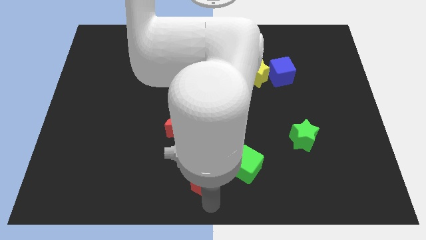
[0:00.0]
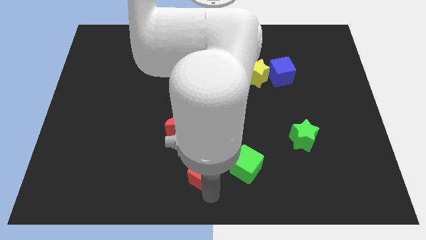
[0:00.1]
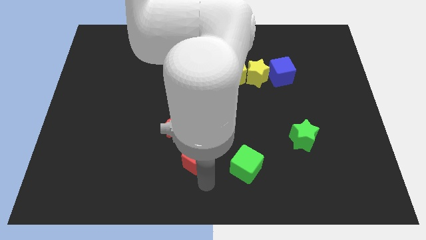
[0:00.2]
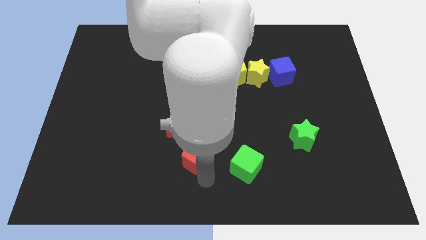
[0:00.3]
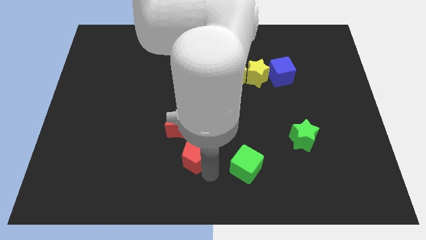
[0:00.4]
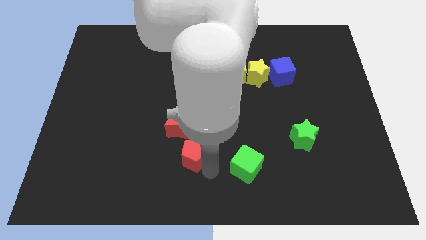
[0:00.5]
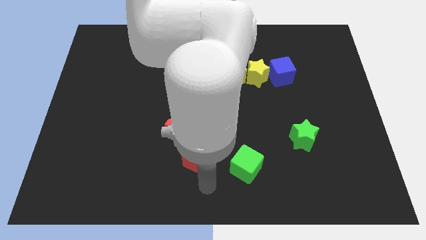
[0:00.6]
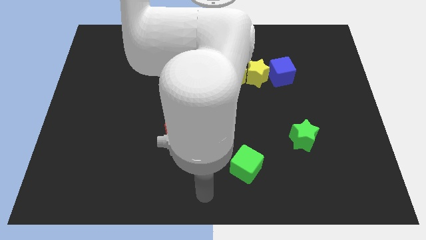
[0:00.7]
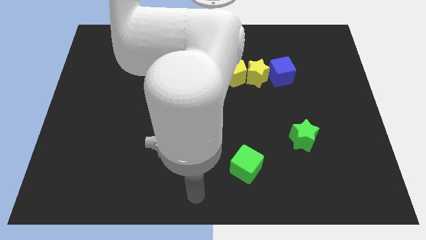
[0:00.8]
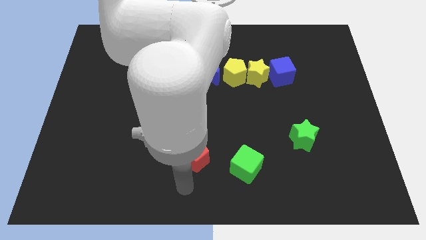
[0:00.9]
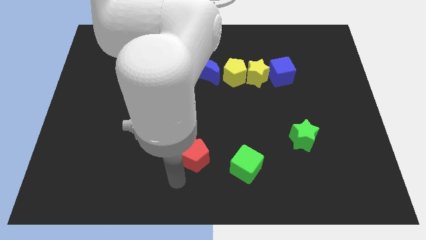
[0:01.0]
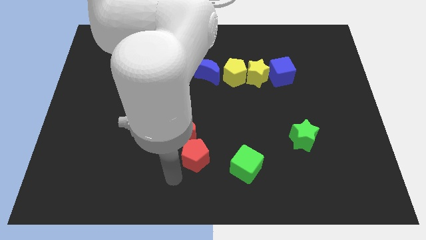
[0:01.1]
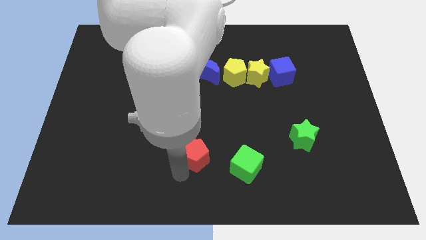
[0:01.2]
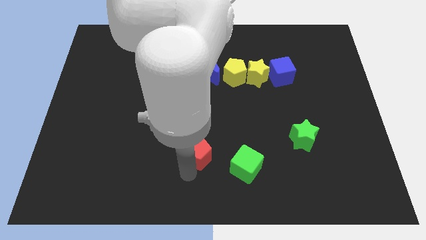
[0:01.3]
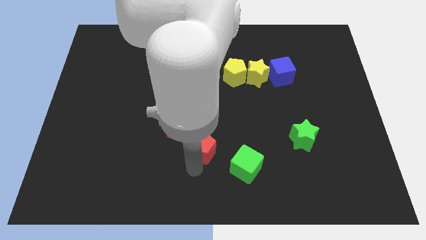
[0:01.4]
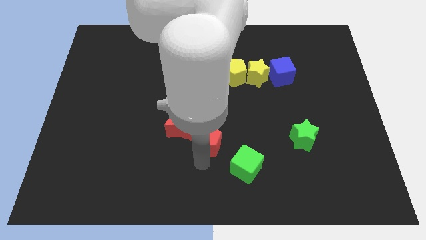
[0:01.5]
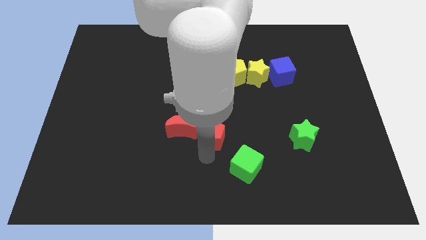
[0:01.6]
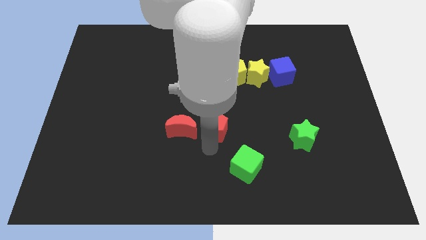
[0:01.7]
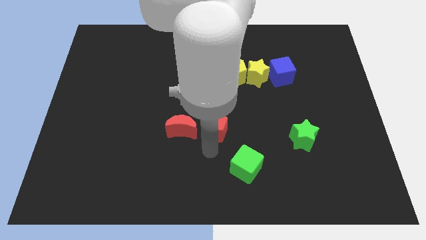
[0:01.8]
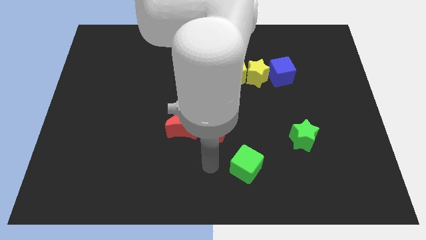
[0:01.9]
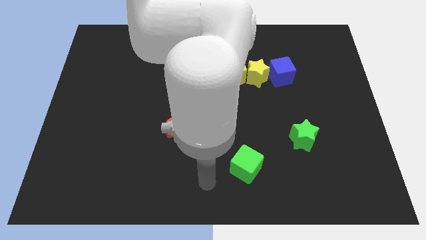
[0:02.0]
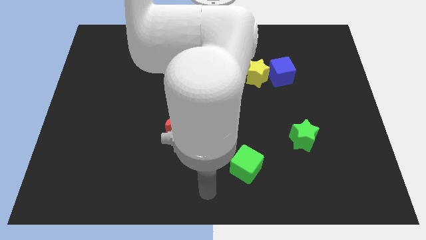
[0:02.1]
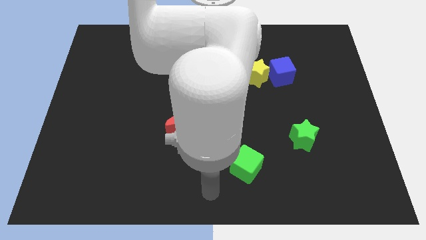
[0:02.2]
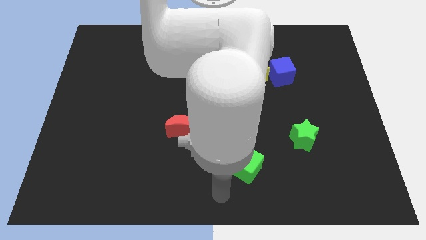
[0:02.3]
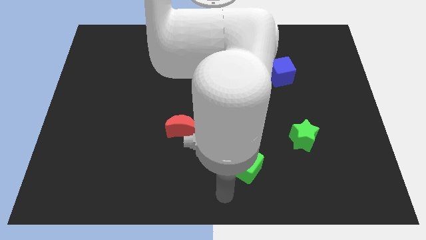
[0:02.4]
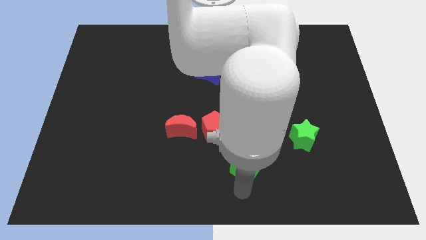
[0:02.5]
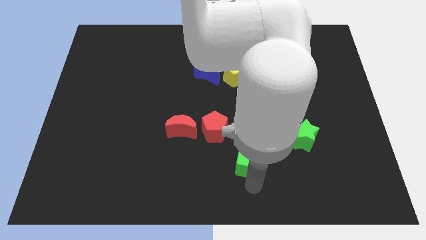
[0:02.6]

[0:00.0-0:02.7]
push the red pentagon to the right of the red crescent

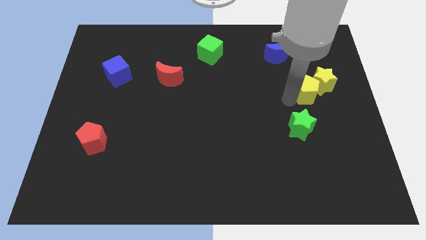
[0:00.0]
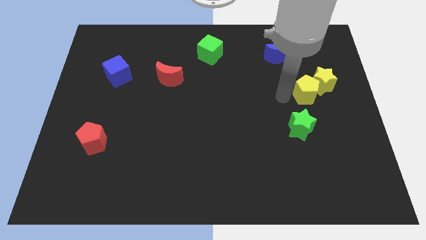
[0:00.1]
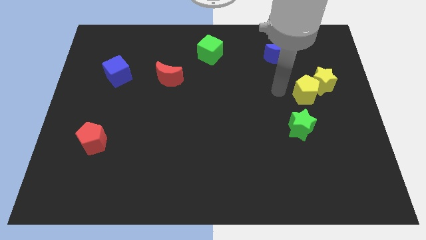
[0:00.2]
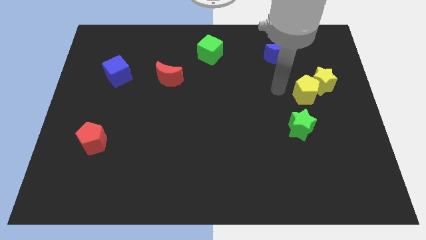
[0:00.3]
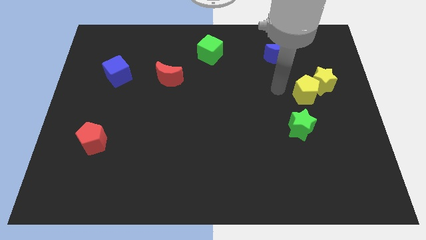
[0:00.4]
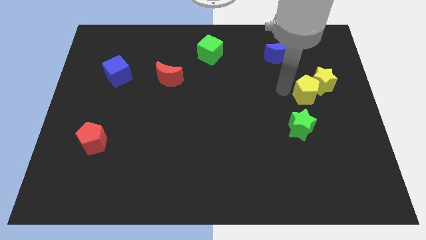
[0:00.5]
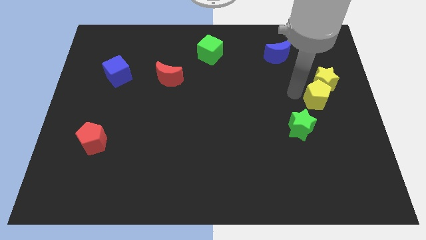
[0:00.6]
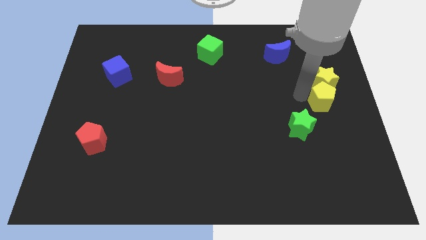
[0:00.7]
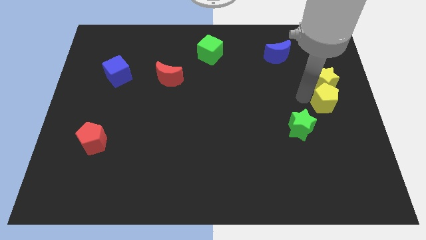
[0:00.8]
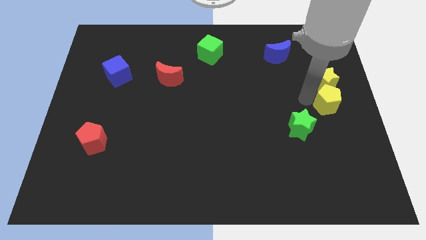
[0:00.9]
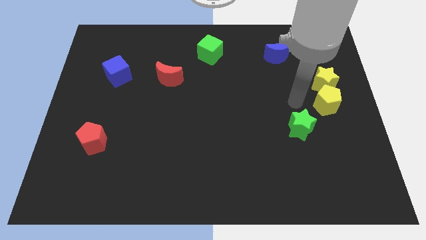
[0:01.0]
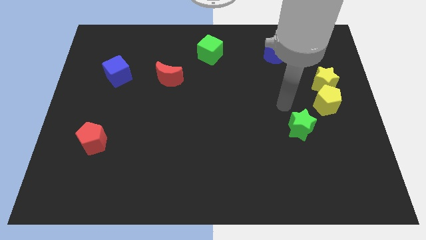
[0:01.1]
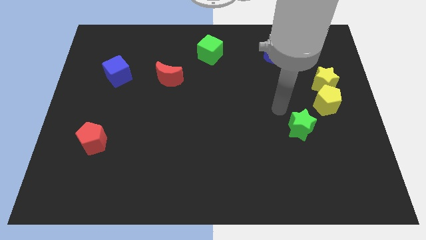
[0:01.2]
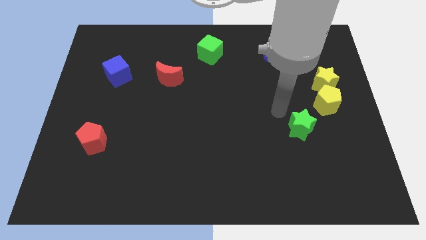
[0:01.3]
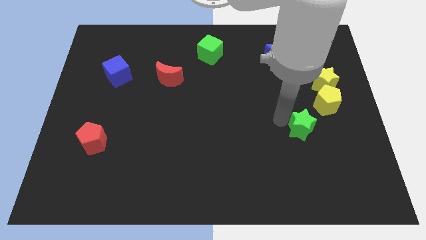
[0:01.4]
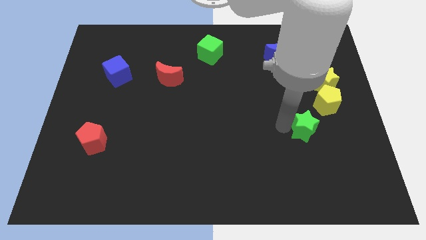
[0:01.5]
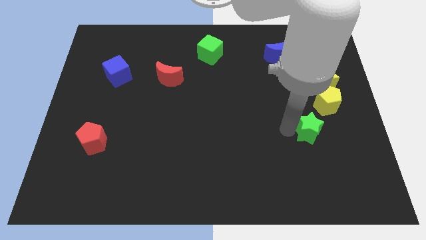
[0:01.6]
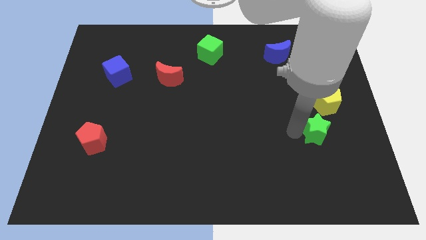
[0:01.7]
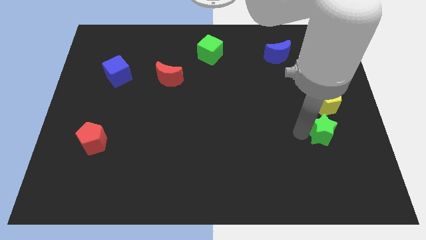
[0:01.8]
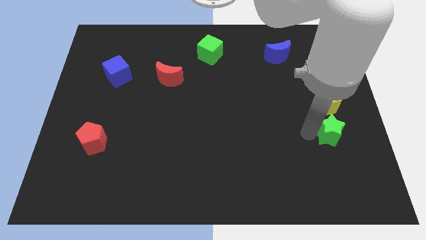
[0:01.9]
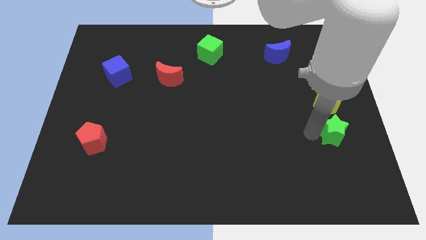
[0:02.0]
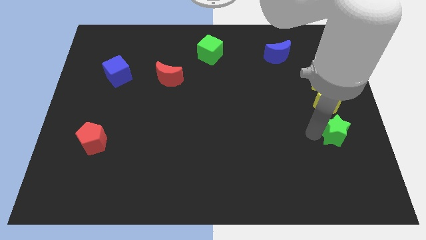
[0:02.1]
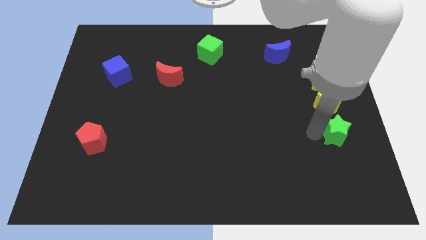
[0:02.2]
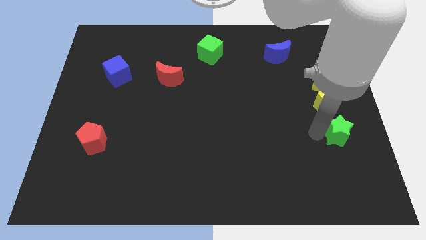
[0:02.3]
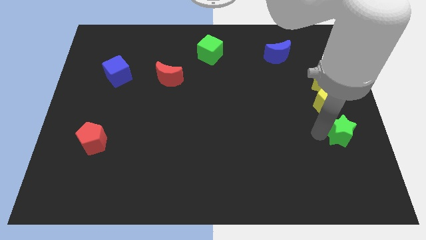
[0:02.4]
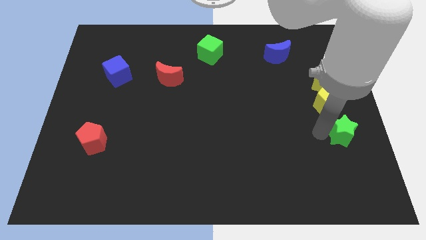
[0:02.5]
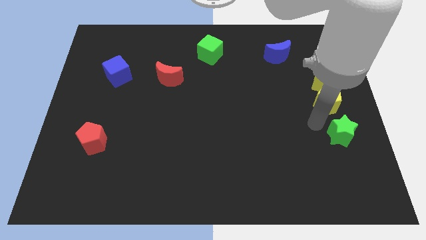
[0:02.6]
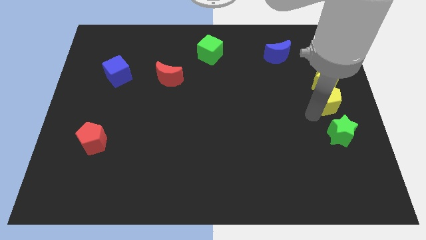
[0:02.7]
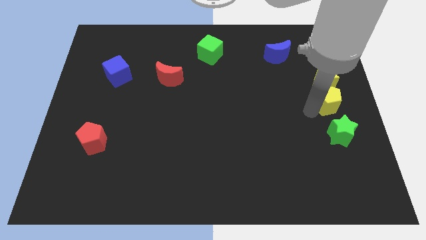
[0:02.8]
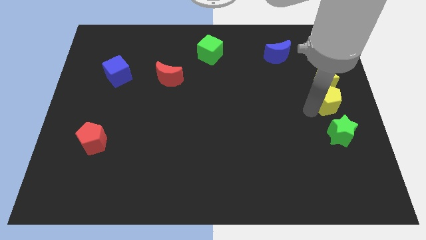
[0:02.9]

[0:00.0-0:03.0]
place green star down to yellow pentagon

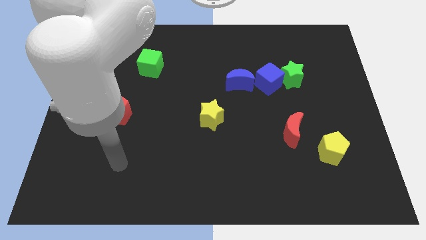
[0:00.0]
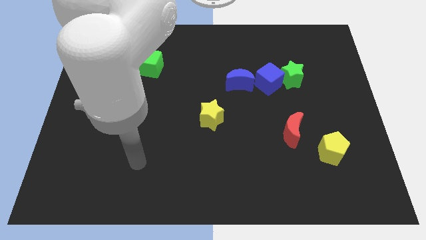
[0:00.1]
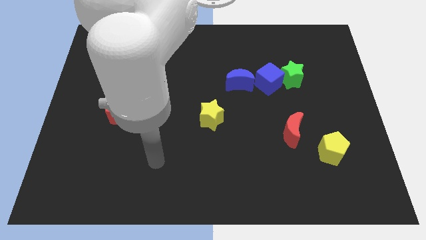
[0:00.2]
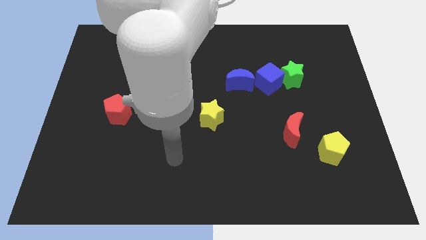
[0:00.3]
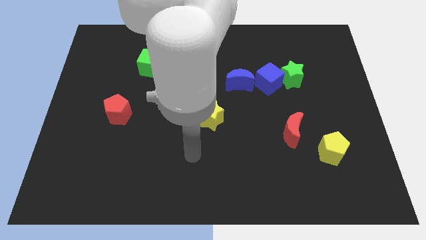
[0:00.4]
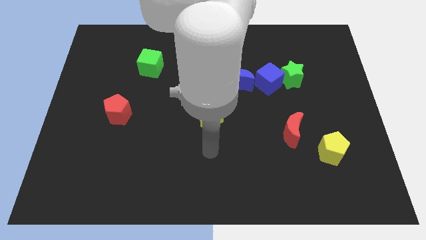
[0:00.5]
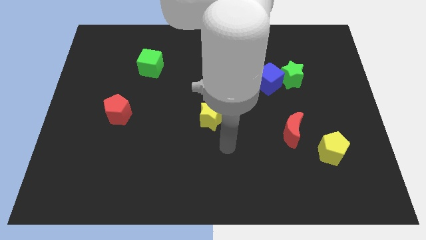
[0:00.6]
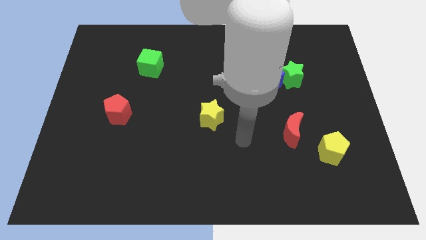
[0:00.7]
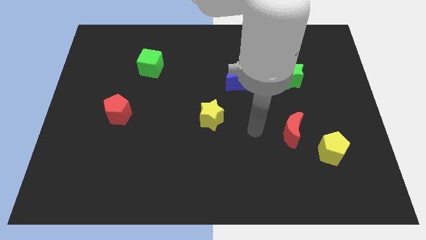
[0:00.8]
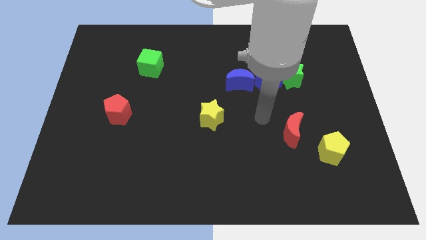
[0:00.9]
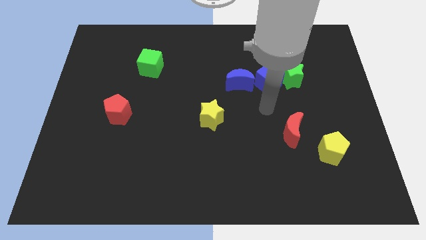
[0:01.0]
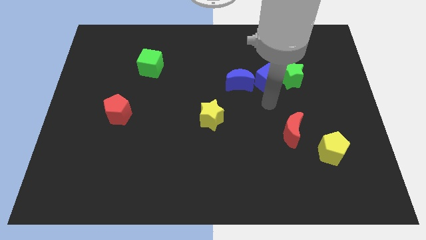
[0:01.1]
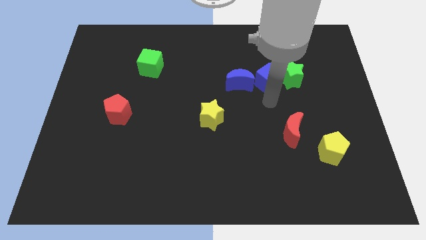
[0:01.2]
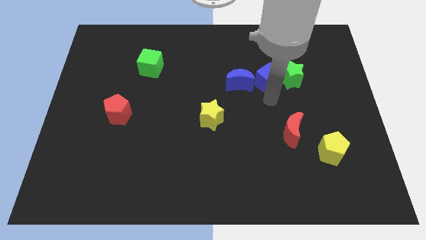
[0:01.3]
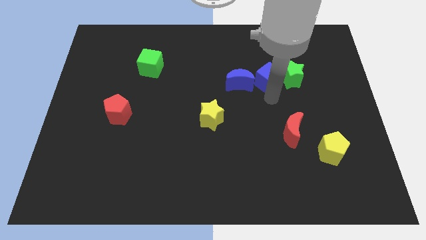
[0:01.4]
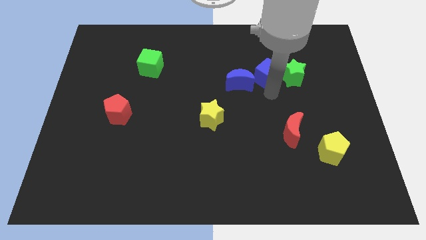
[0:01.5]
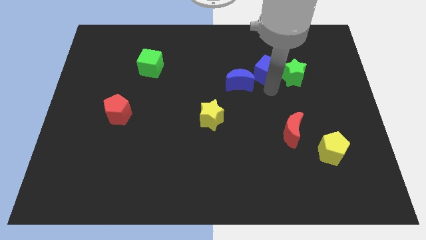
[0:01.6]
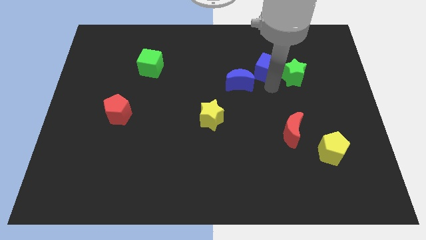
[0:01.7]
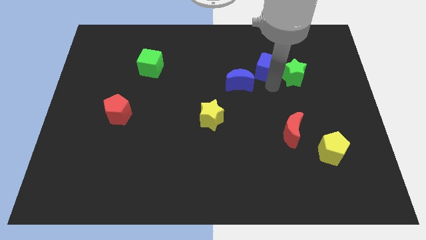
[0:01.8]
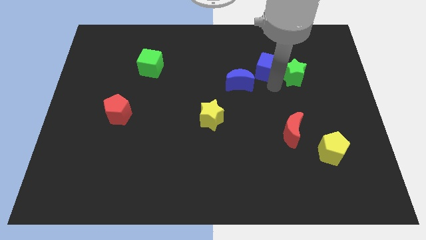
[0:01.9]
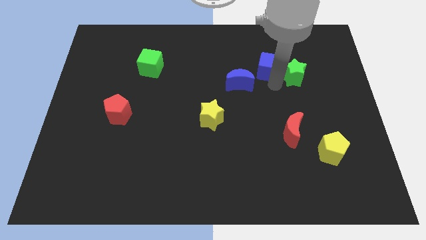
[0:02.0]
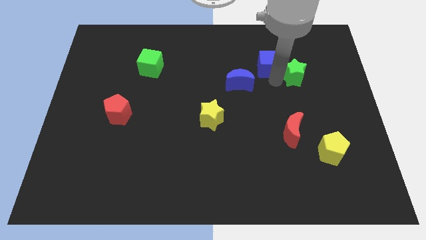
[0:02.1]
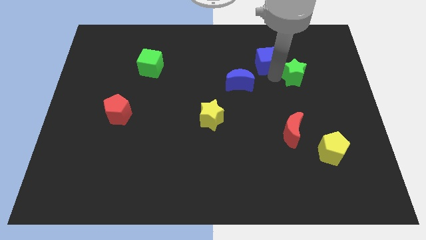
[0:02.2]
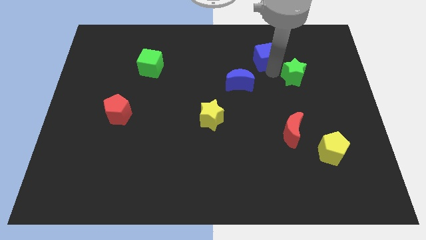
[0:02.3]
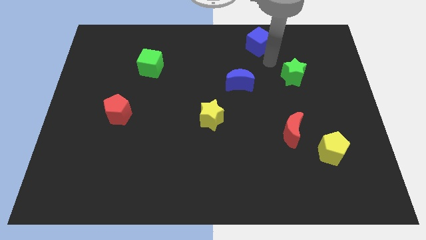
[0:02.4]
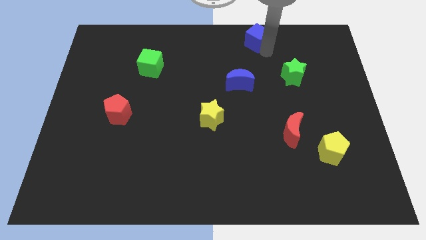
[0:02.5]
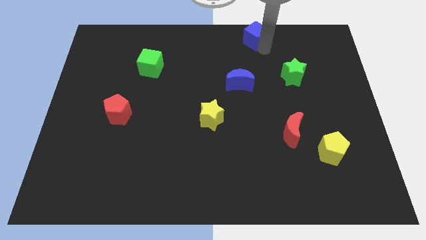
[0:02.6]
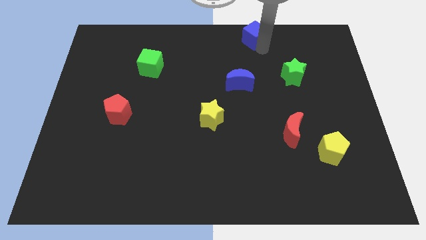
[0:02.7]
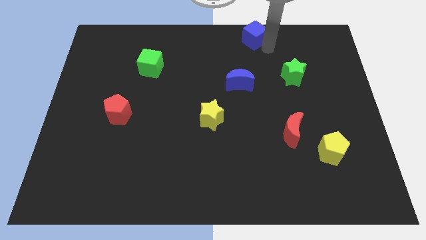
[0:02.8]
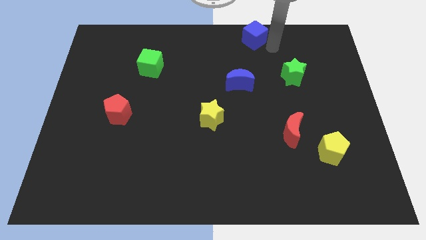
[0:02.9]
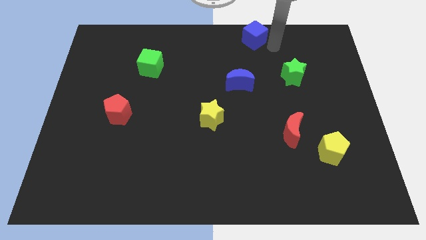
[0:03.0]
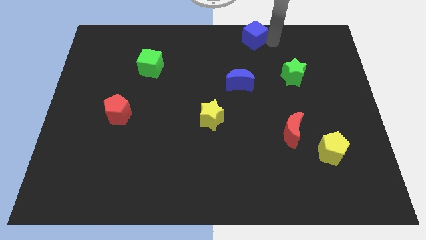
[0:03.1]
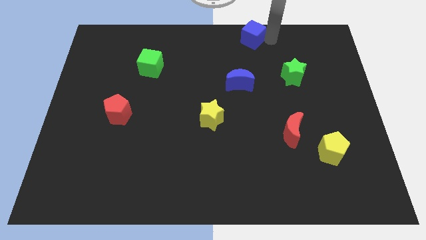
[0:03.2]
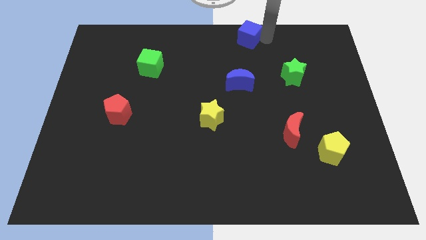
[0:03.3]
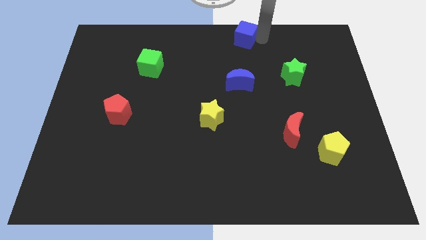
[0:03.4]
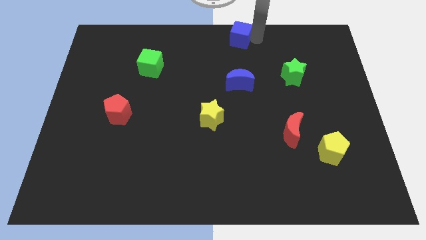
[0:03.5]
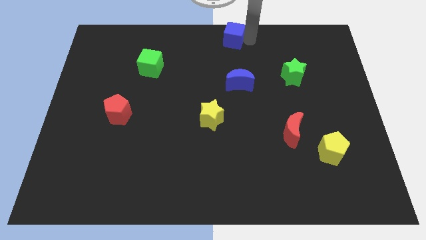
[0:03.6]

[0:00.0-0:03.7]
place the blue cube above the blue moon
